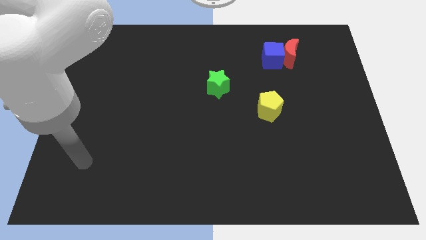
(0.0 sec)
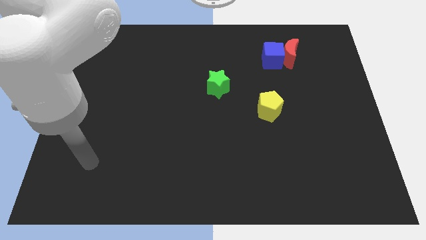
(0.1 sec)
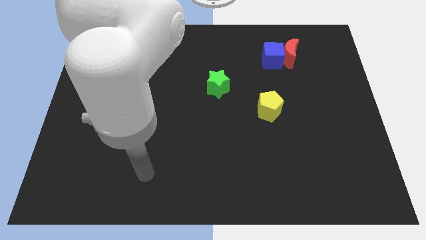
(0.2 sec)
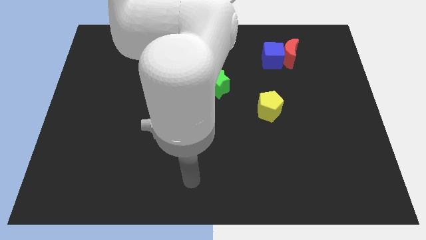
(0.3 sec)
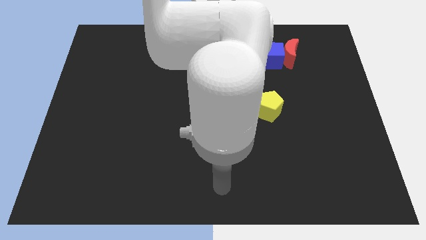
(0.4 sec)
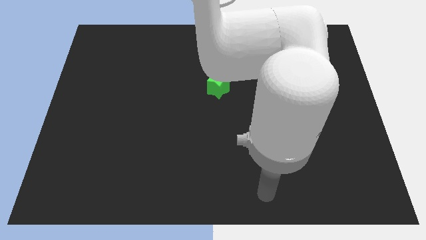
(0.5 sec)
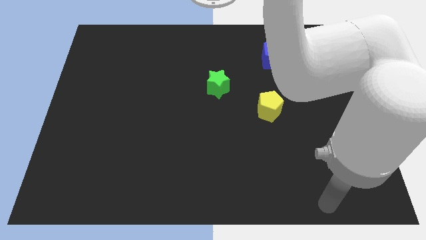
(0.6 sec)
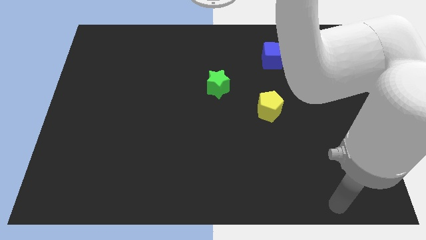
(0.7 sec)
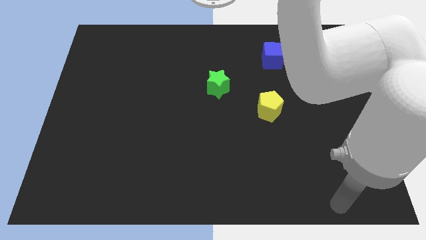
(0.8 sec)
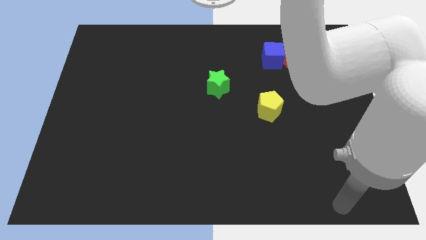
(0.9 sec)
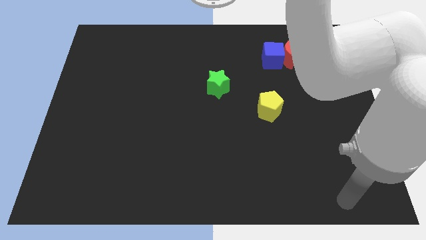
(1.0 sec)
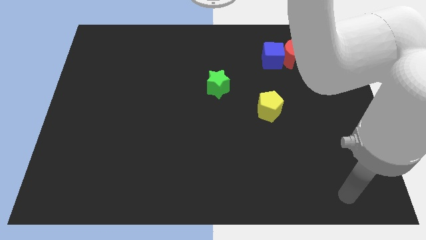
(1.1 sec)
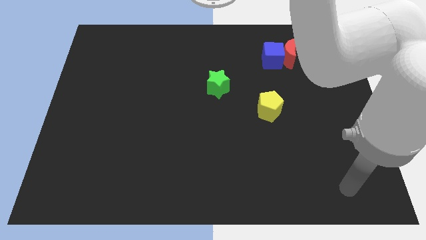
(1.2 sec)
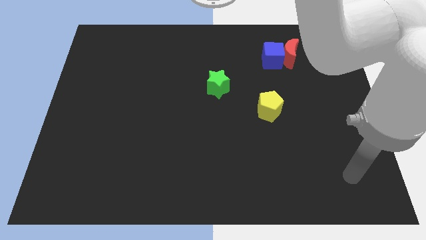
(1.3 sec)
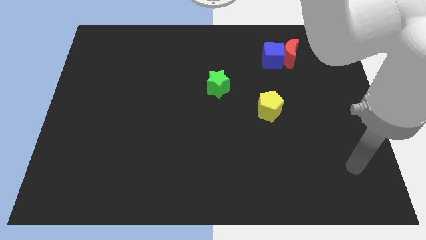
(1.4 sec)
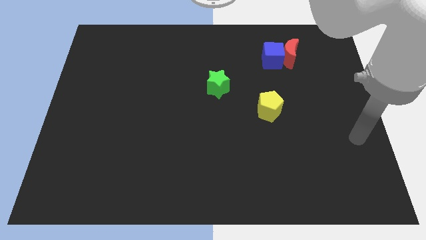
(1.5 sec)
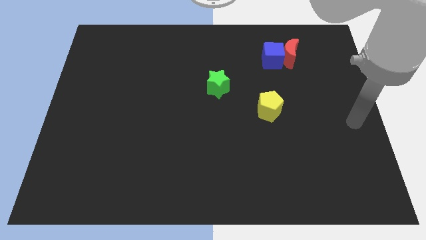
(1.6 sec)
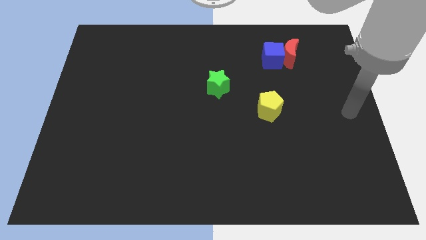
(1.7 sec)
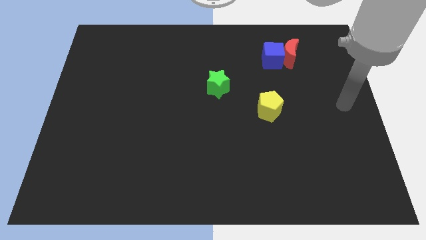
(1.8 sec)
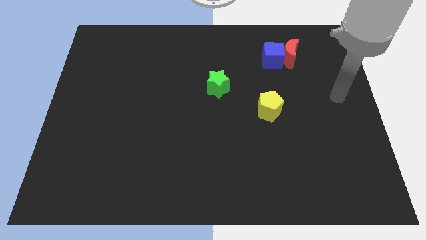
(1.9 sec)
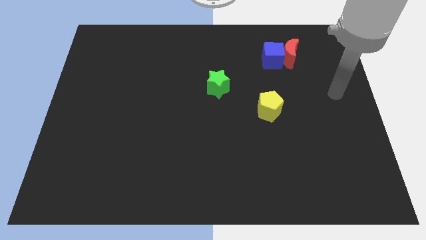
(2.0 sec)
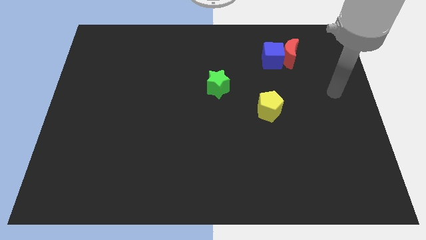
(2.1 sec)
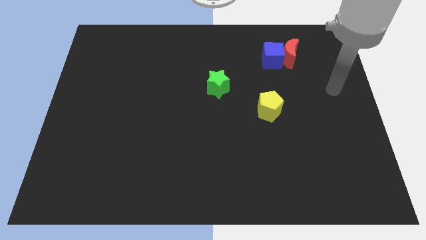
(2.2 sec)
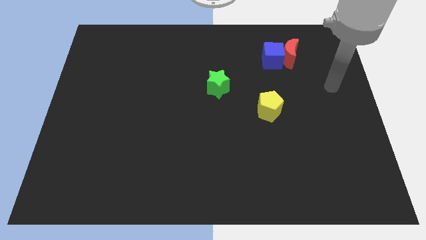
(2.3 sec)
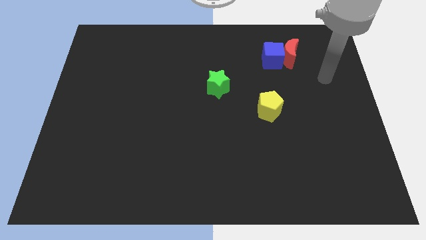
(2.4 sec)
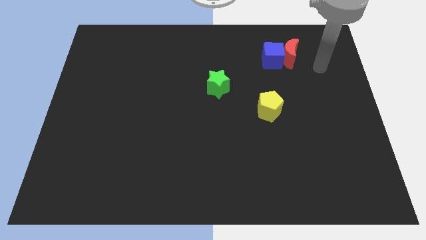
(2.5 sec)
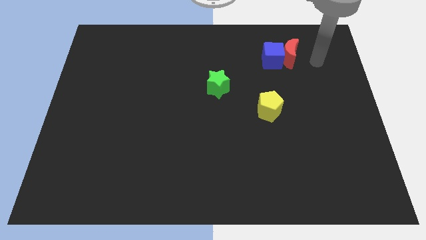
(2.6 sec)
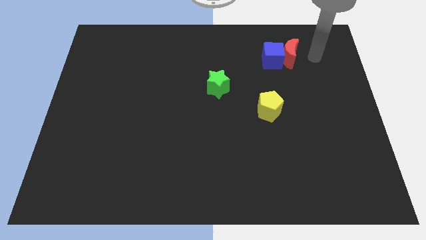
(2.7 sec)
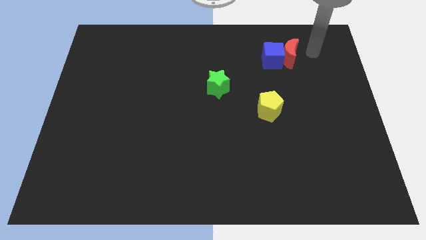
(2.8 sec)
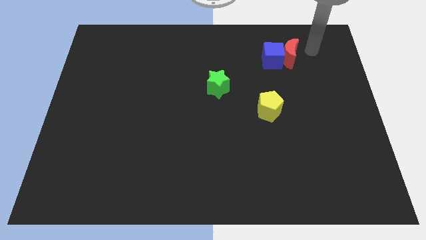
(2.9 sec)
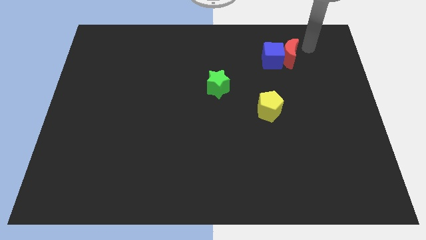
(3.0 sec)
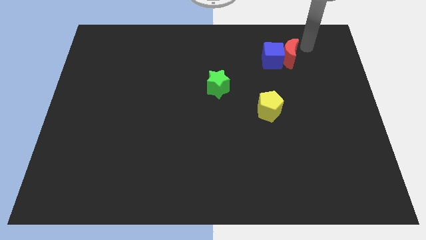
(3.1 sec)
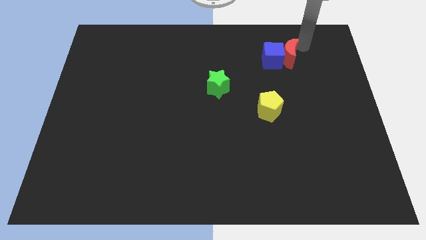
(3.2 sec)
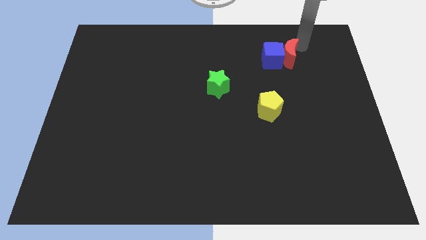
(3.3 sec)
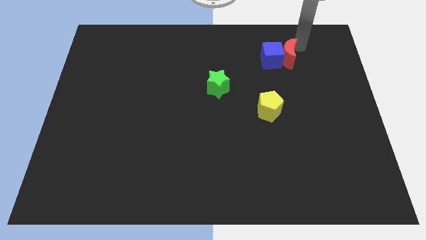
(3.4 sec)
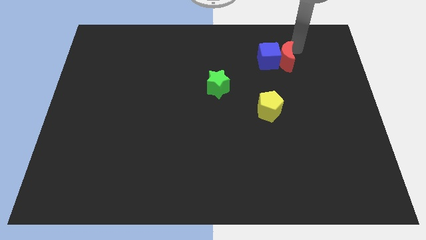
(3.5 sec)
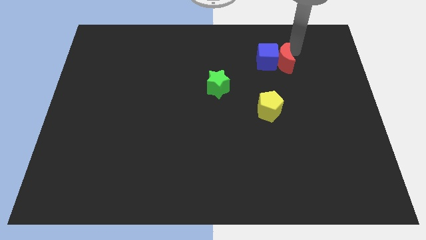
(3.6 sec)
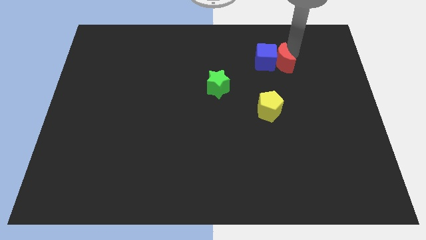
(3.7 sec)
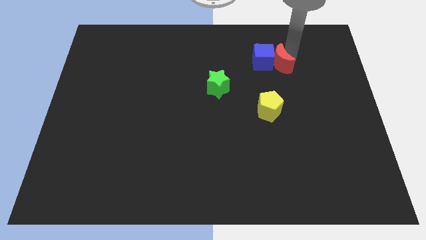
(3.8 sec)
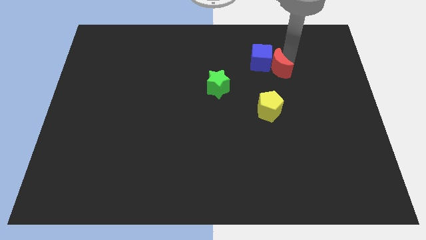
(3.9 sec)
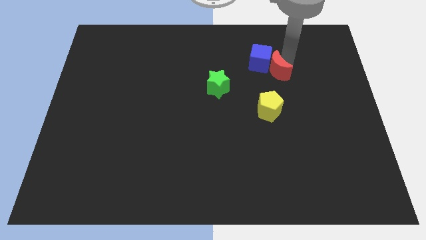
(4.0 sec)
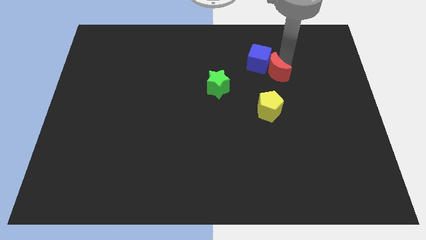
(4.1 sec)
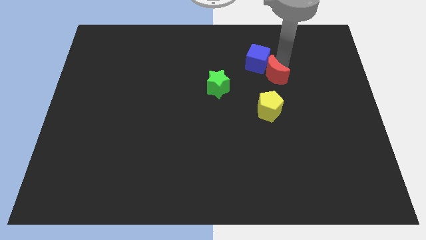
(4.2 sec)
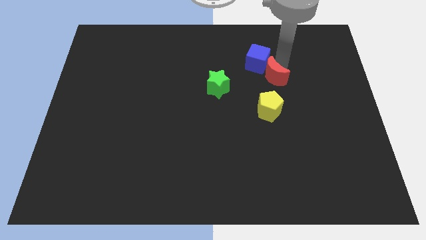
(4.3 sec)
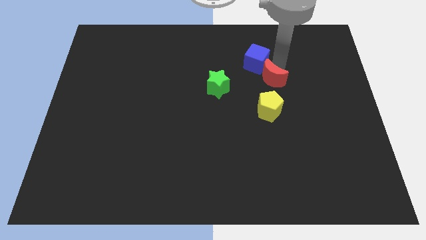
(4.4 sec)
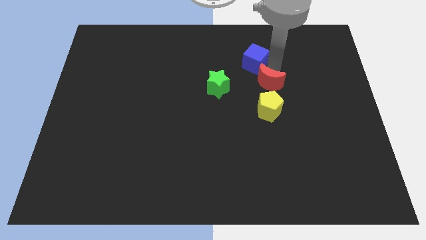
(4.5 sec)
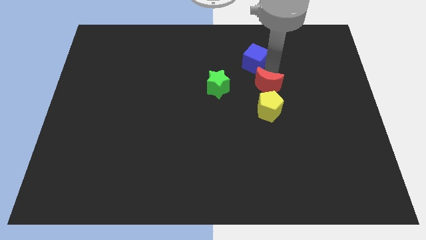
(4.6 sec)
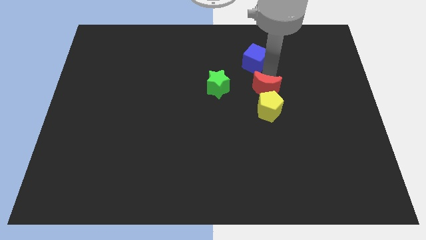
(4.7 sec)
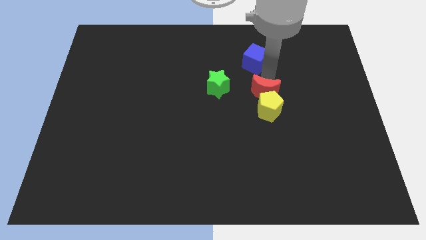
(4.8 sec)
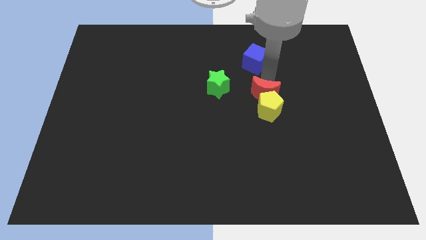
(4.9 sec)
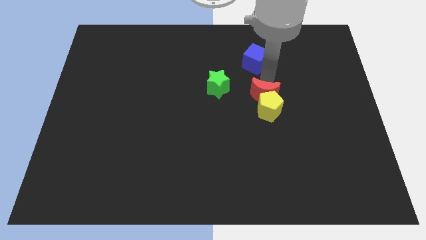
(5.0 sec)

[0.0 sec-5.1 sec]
push the red block close to the pentagon

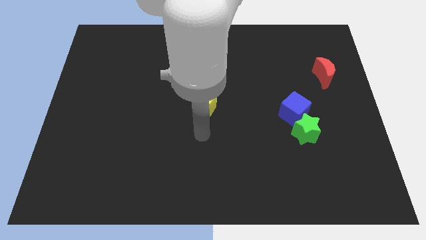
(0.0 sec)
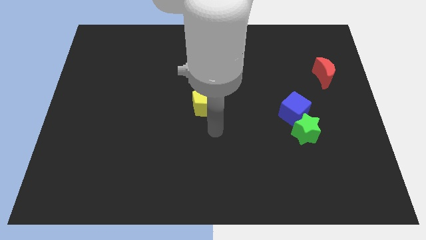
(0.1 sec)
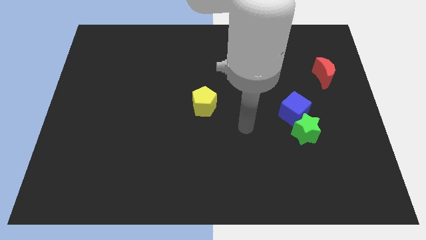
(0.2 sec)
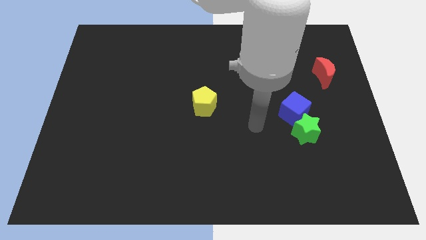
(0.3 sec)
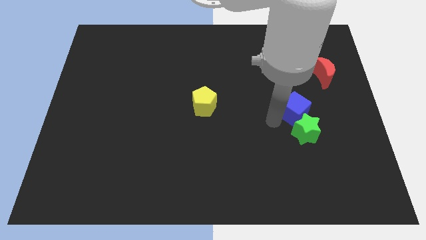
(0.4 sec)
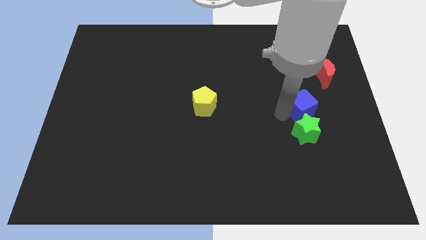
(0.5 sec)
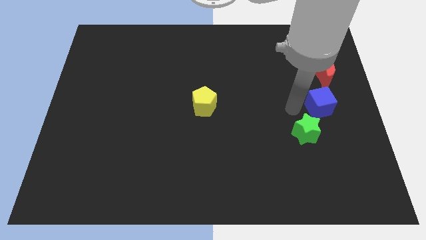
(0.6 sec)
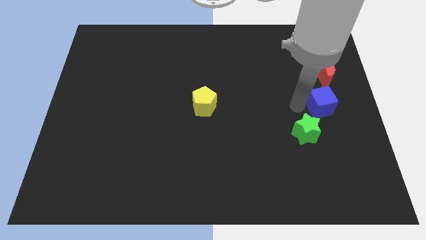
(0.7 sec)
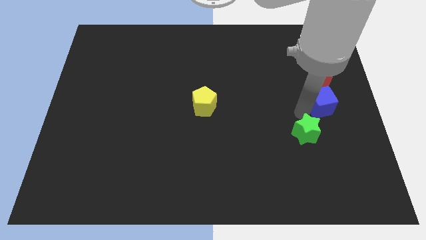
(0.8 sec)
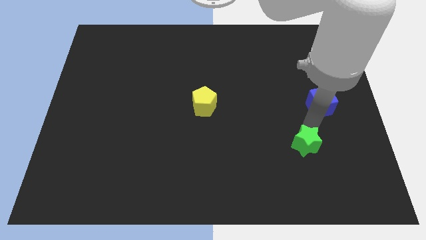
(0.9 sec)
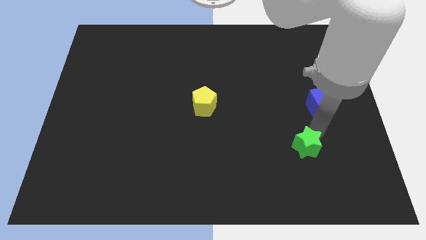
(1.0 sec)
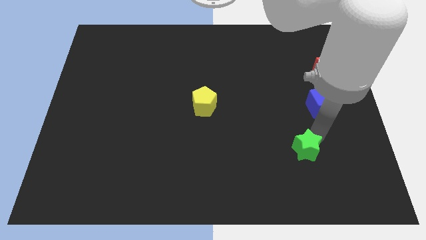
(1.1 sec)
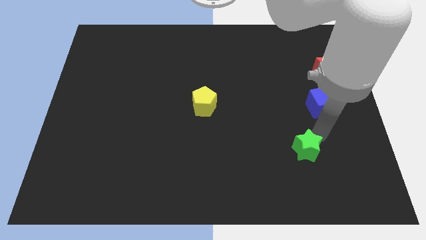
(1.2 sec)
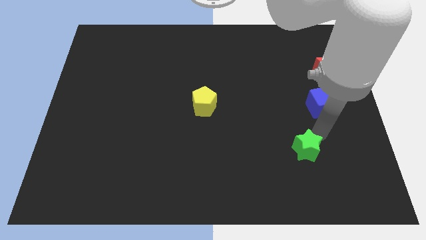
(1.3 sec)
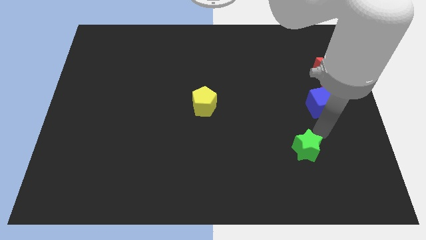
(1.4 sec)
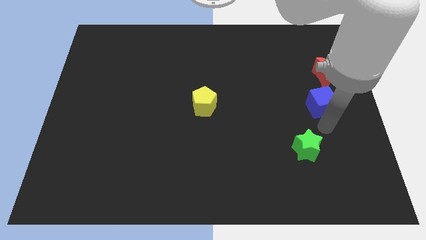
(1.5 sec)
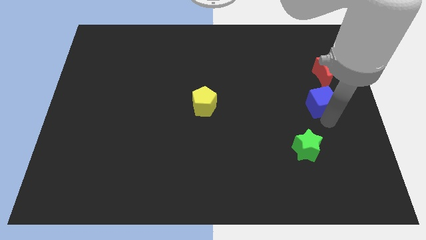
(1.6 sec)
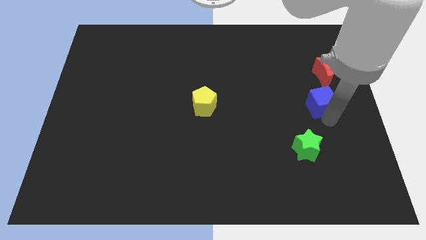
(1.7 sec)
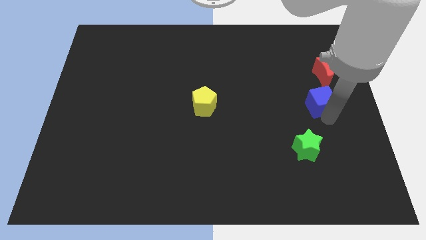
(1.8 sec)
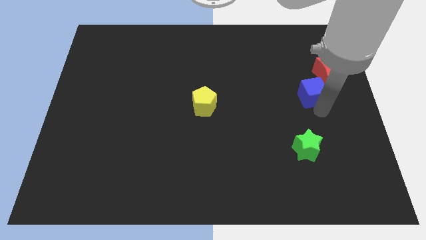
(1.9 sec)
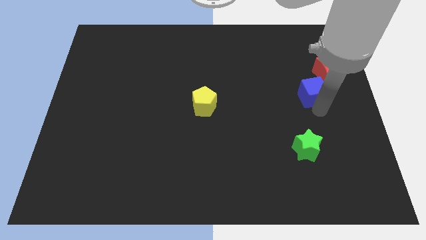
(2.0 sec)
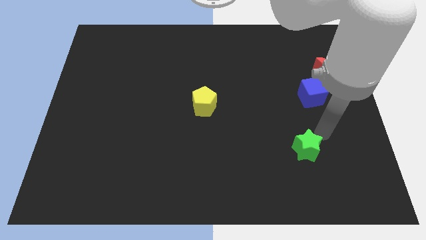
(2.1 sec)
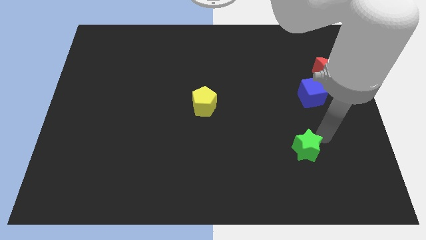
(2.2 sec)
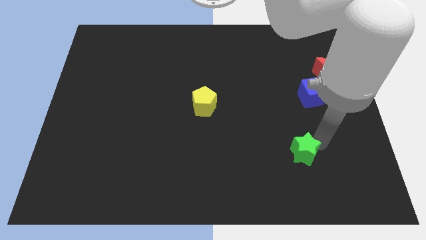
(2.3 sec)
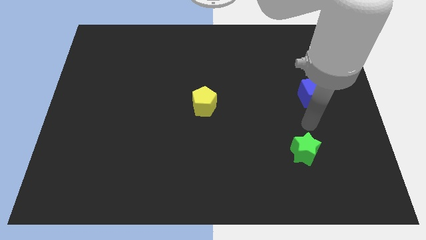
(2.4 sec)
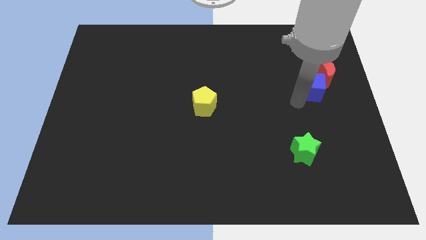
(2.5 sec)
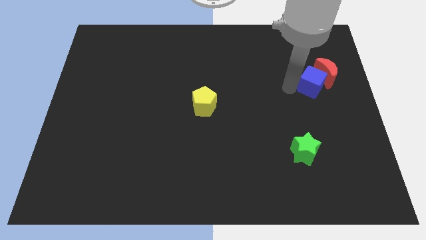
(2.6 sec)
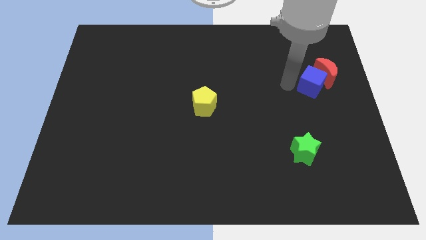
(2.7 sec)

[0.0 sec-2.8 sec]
move the cube towards the red moon

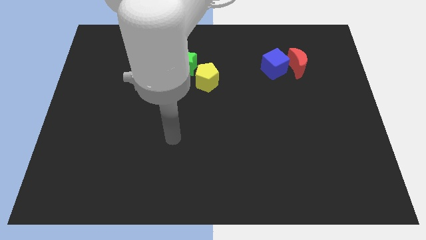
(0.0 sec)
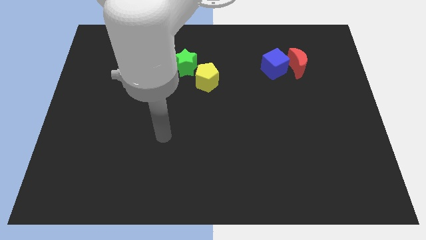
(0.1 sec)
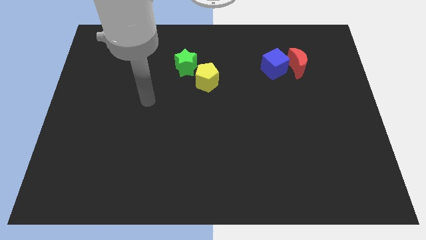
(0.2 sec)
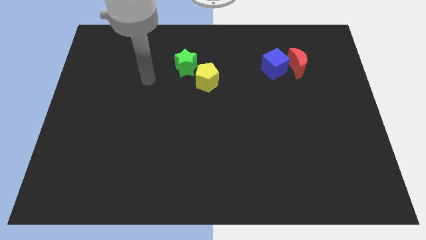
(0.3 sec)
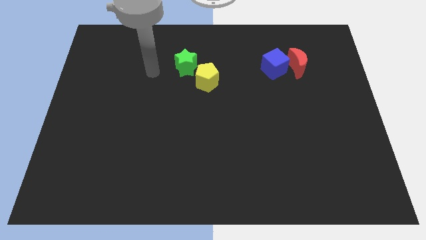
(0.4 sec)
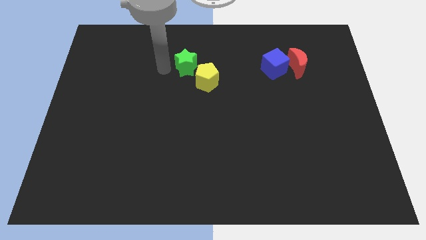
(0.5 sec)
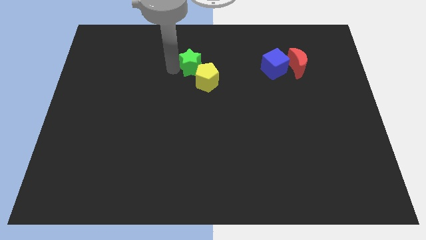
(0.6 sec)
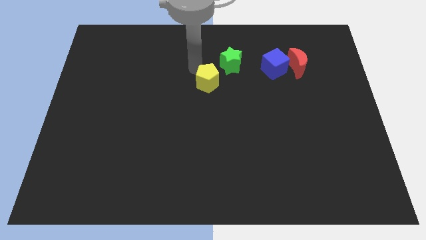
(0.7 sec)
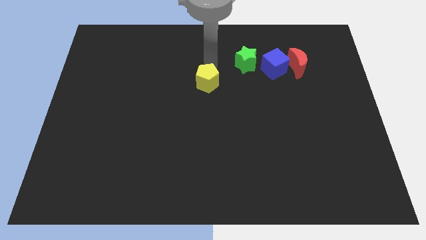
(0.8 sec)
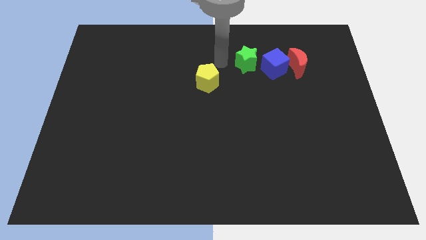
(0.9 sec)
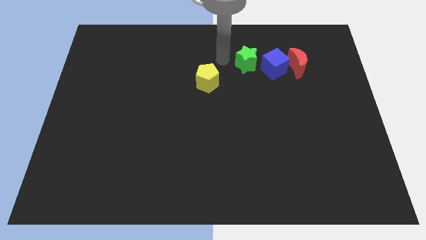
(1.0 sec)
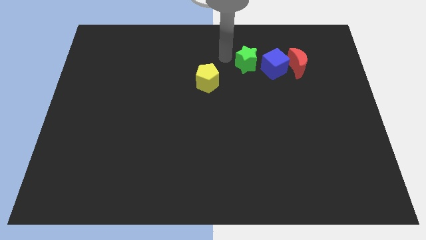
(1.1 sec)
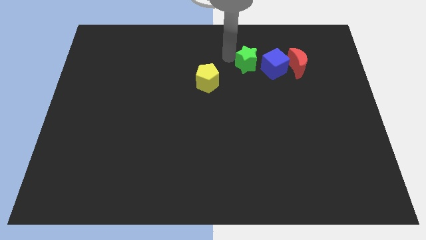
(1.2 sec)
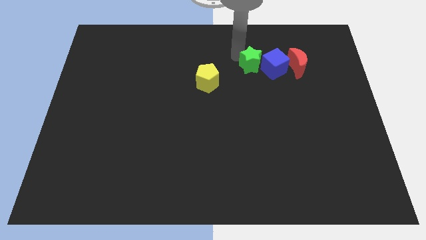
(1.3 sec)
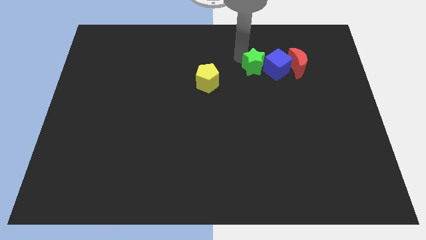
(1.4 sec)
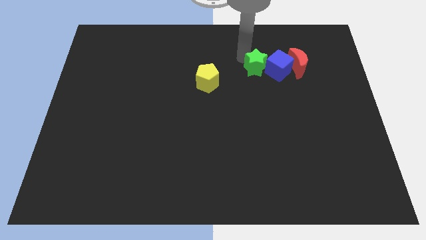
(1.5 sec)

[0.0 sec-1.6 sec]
put the green block next to the blue cube
